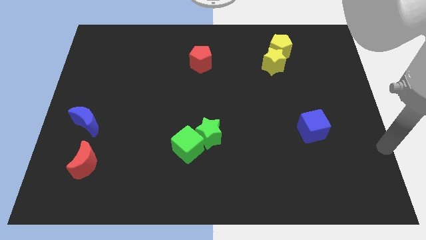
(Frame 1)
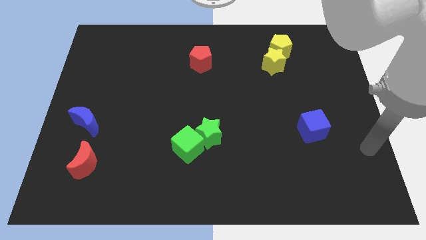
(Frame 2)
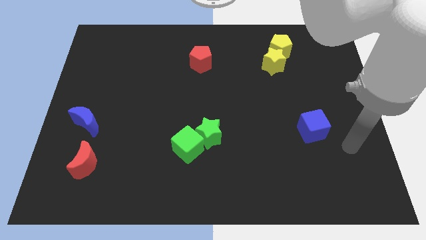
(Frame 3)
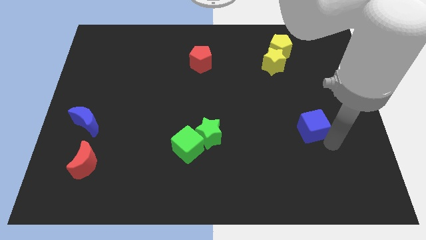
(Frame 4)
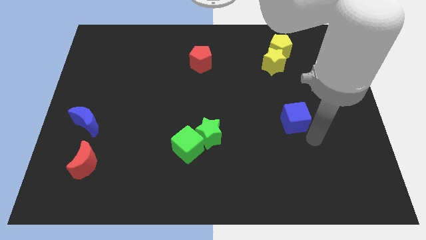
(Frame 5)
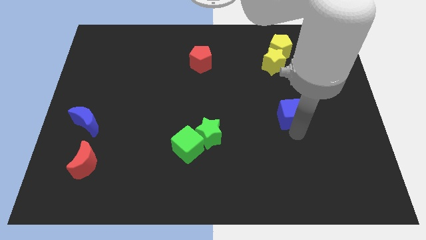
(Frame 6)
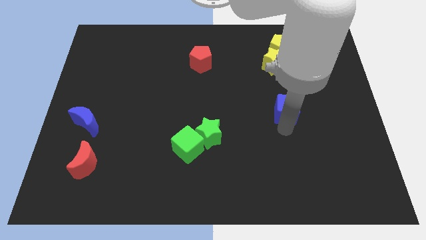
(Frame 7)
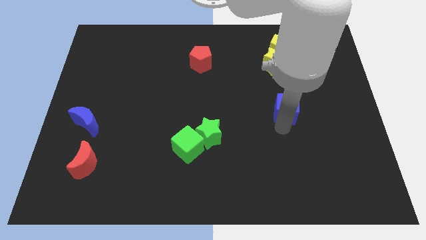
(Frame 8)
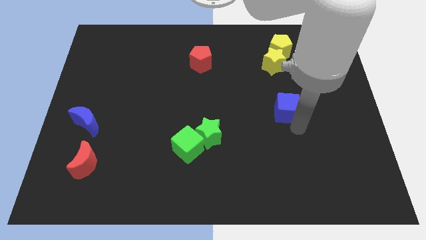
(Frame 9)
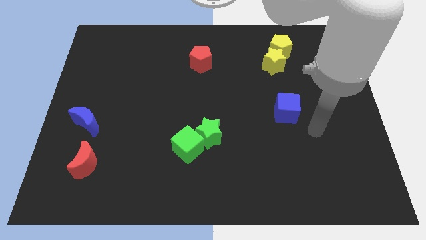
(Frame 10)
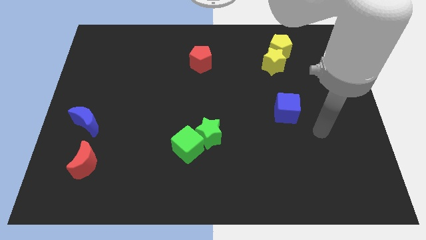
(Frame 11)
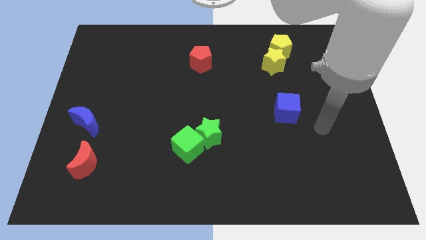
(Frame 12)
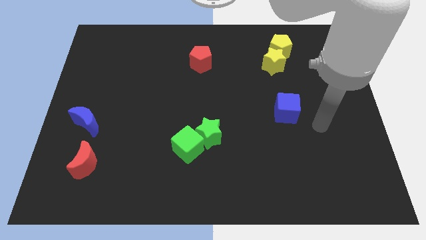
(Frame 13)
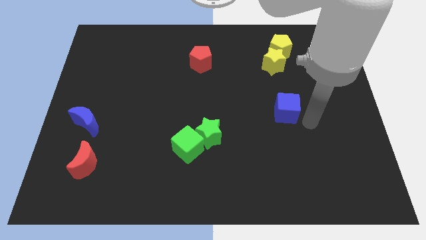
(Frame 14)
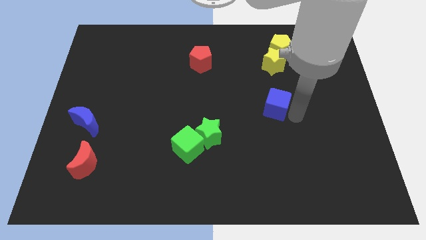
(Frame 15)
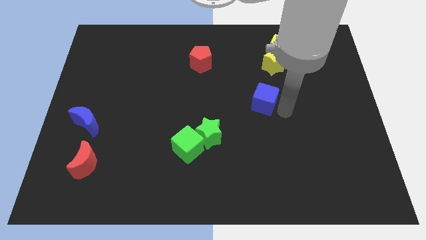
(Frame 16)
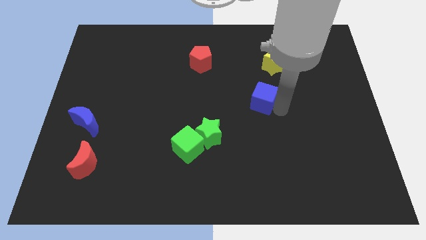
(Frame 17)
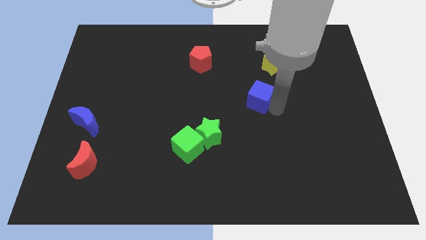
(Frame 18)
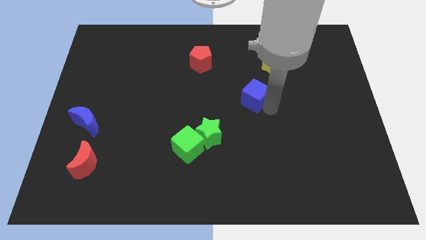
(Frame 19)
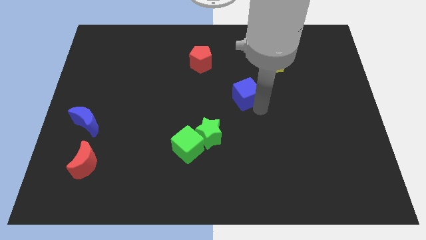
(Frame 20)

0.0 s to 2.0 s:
move the blue cube between yellow and green blocks

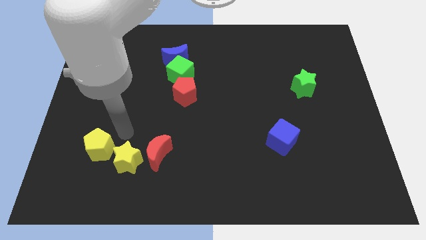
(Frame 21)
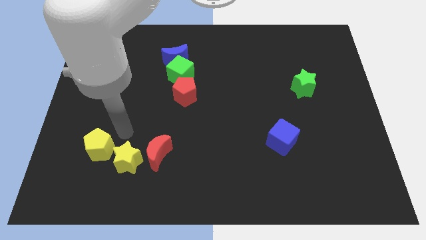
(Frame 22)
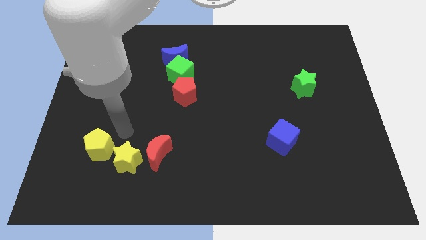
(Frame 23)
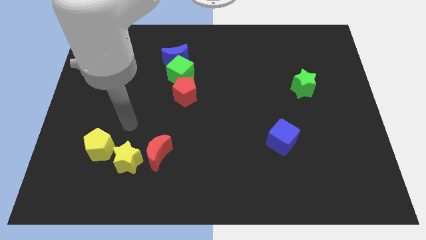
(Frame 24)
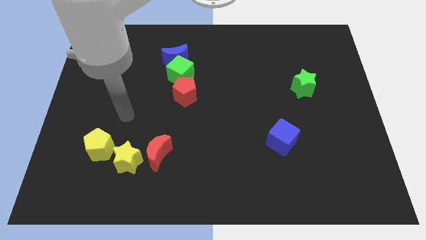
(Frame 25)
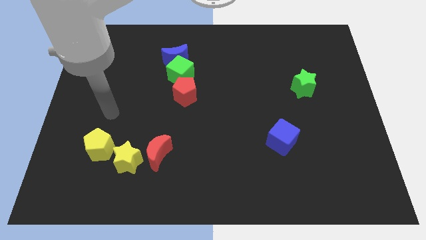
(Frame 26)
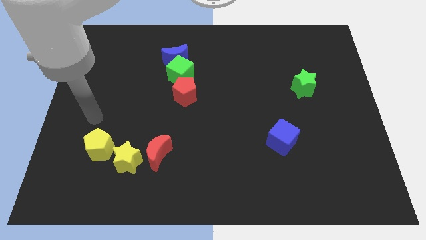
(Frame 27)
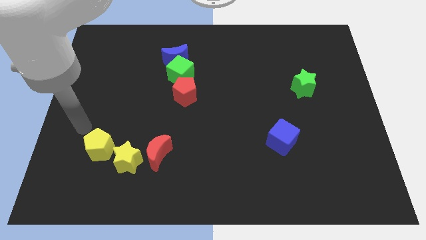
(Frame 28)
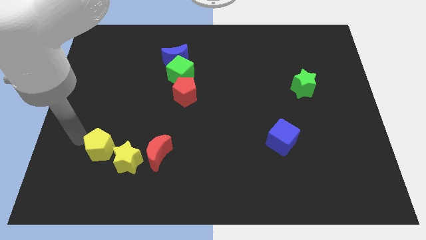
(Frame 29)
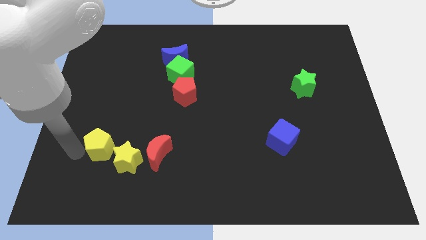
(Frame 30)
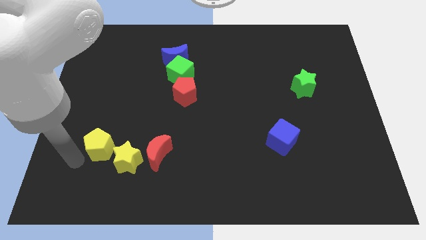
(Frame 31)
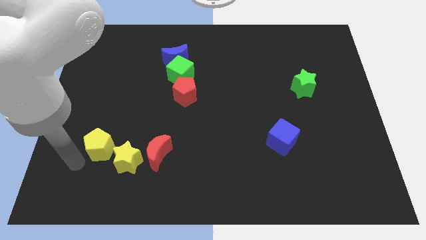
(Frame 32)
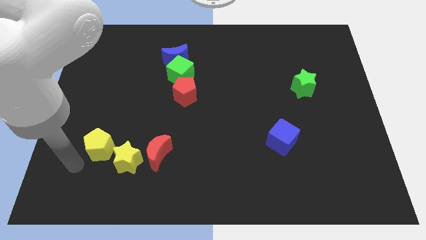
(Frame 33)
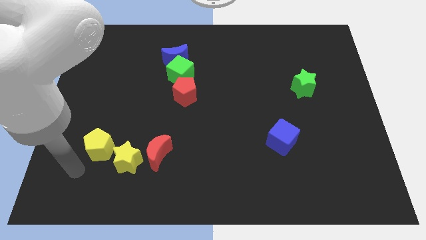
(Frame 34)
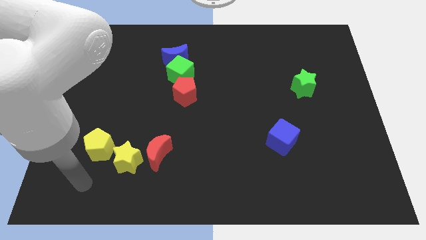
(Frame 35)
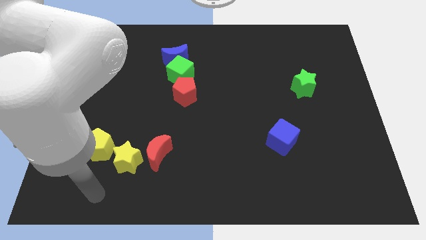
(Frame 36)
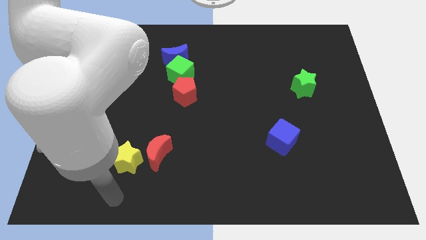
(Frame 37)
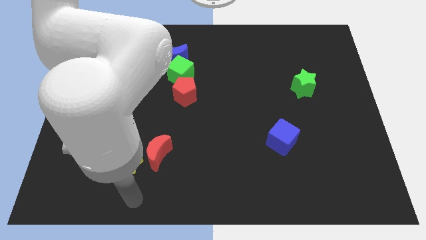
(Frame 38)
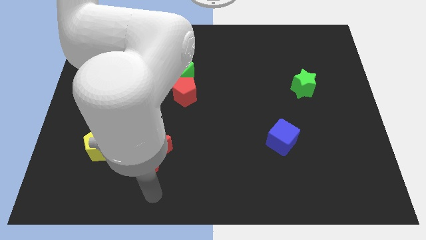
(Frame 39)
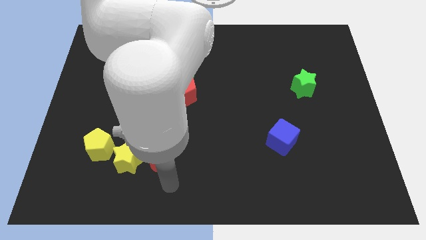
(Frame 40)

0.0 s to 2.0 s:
point your hand below the red moon

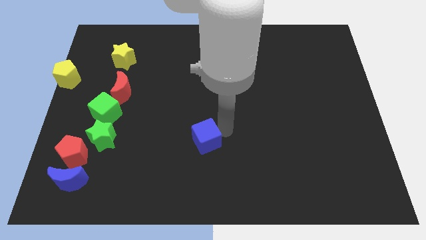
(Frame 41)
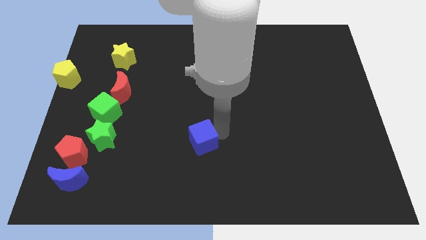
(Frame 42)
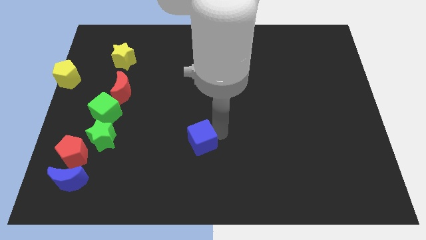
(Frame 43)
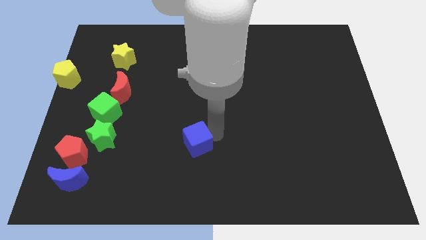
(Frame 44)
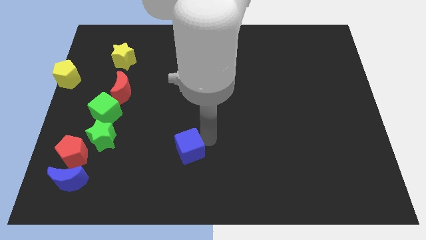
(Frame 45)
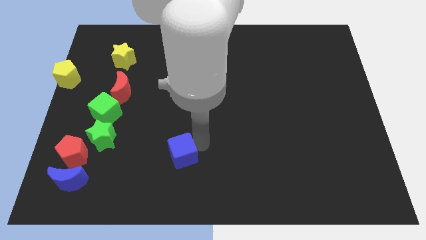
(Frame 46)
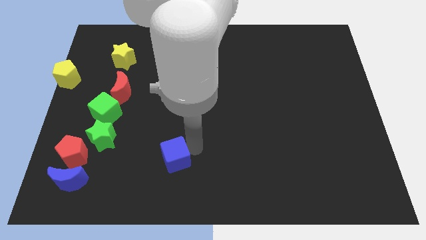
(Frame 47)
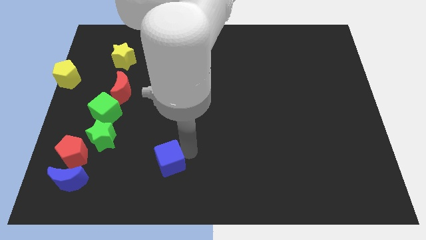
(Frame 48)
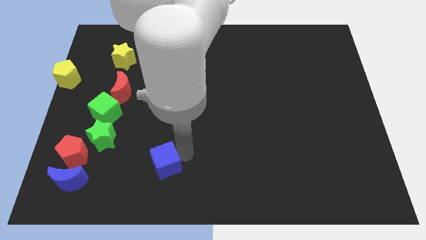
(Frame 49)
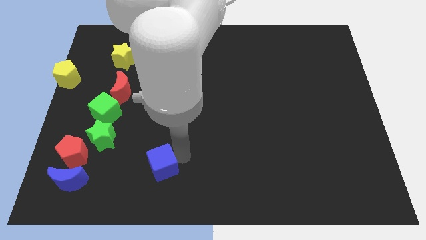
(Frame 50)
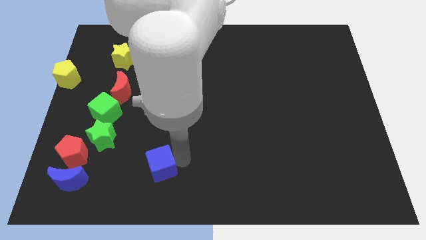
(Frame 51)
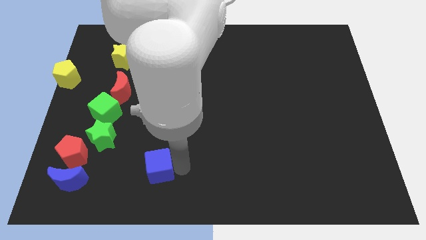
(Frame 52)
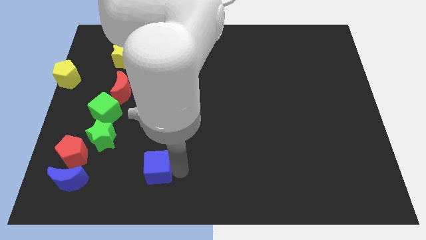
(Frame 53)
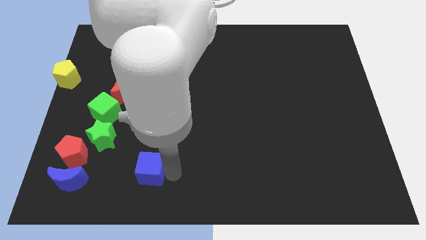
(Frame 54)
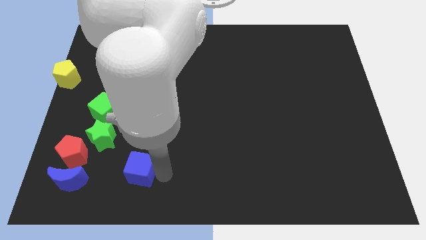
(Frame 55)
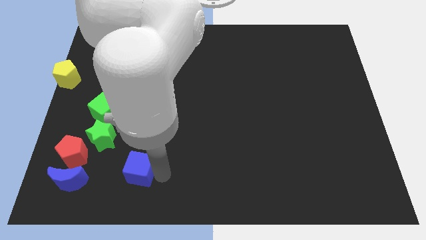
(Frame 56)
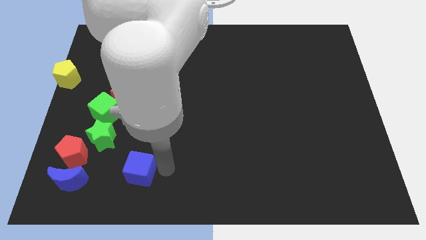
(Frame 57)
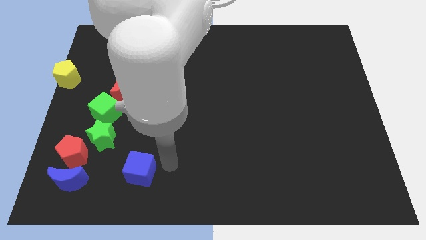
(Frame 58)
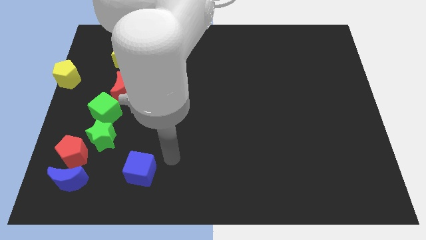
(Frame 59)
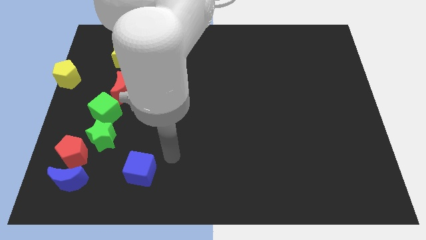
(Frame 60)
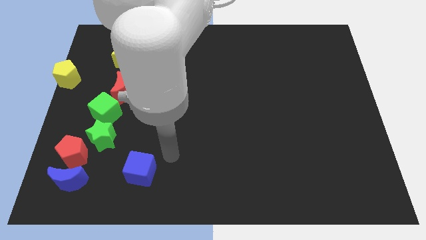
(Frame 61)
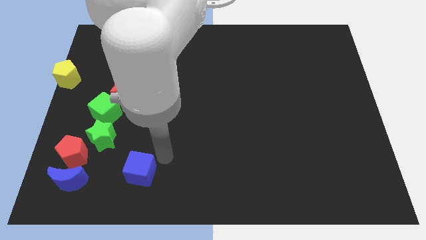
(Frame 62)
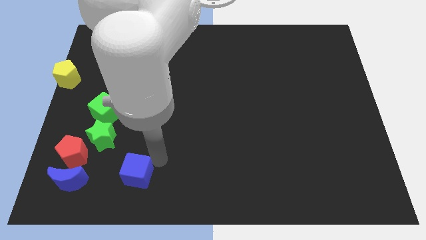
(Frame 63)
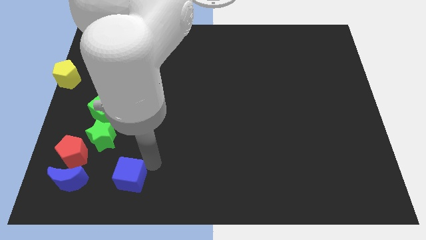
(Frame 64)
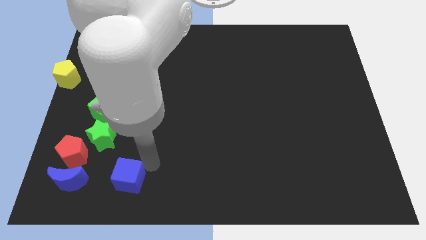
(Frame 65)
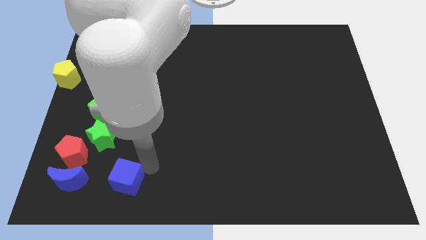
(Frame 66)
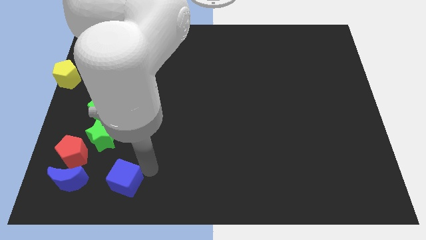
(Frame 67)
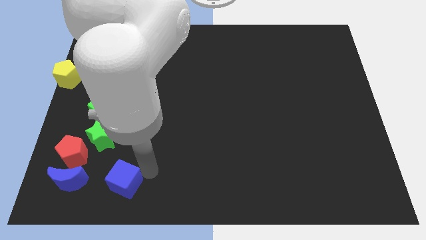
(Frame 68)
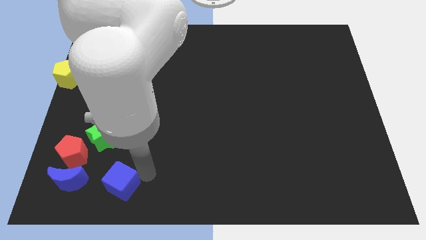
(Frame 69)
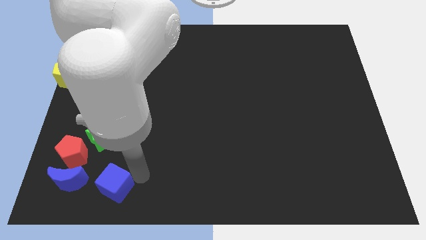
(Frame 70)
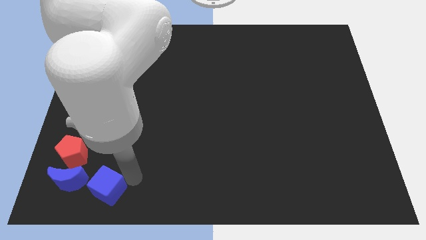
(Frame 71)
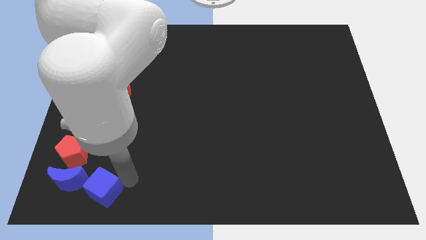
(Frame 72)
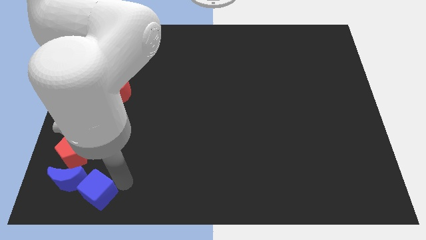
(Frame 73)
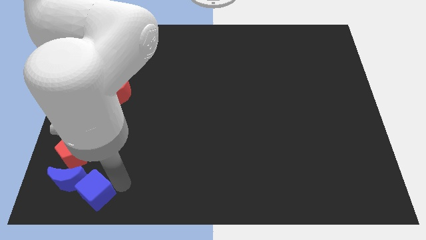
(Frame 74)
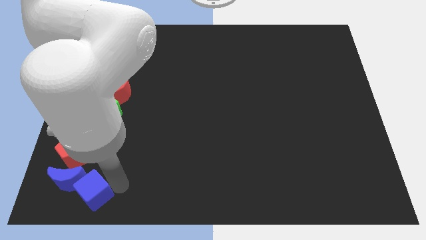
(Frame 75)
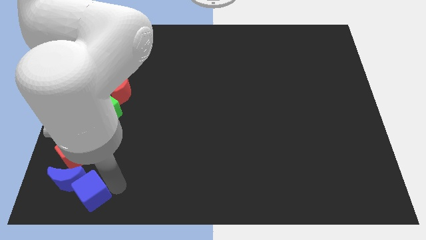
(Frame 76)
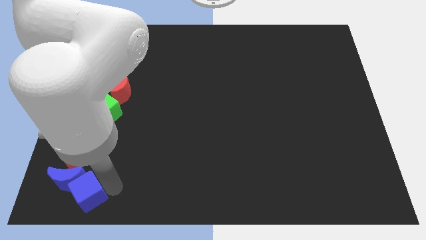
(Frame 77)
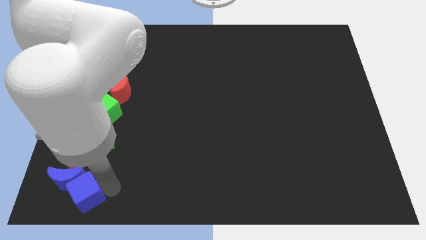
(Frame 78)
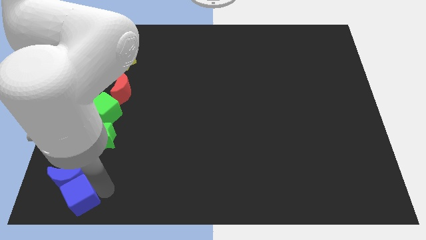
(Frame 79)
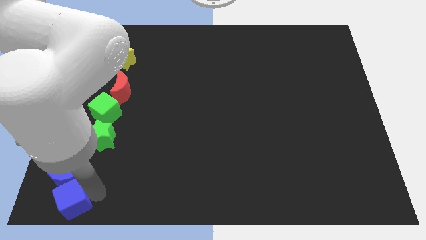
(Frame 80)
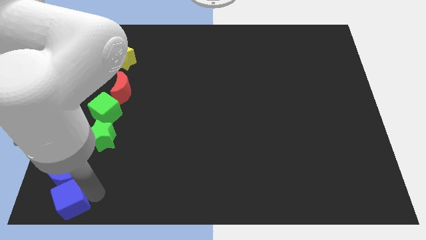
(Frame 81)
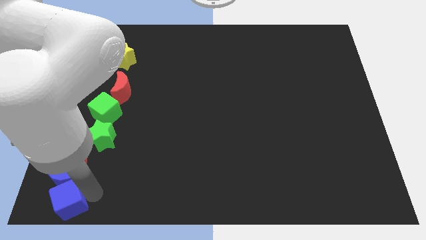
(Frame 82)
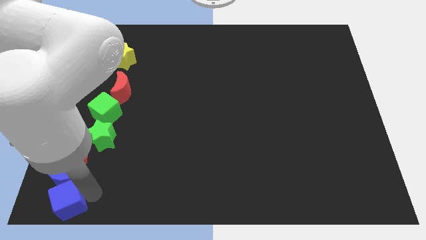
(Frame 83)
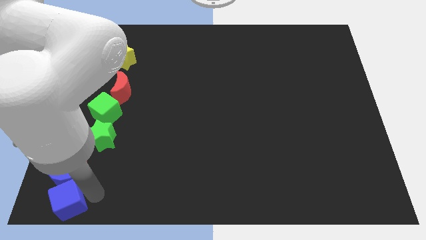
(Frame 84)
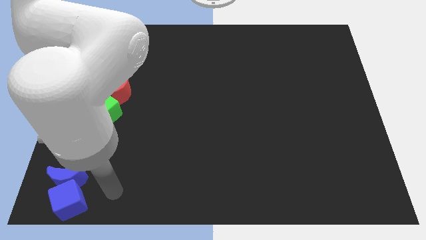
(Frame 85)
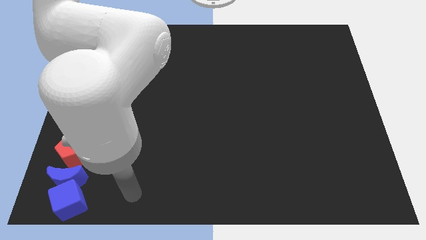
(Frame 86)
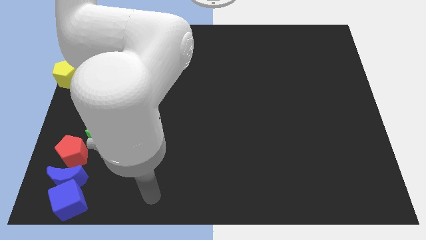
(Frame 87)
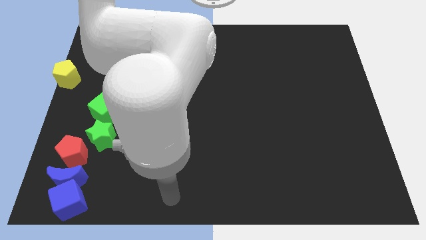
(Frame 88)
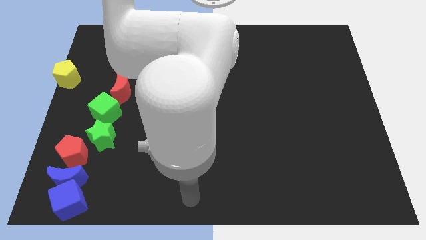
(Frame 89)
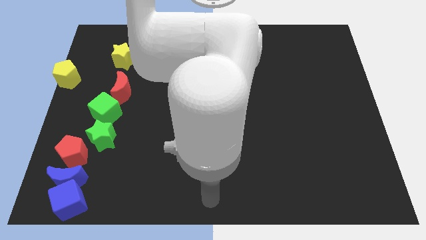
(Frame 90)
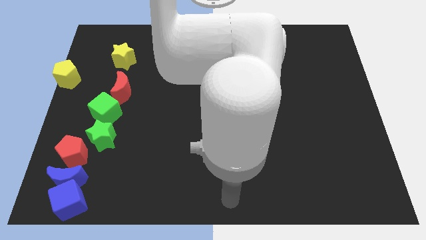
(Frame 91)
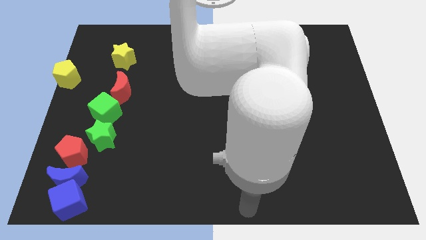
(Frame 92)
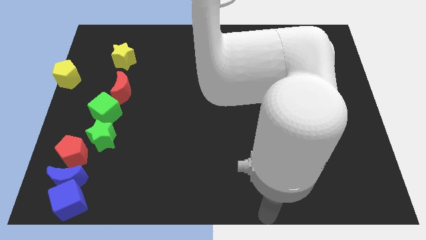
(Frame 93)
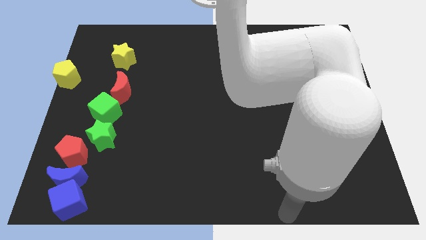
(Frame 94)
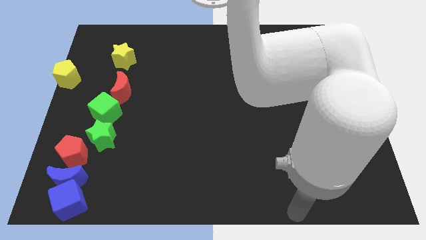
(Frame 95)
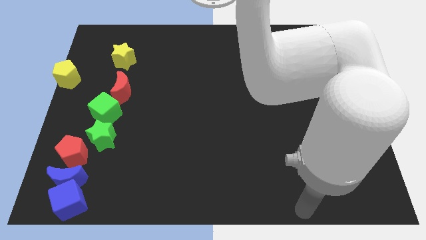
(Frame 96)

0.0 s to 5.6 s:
place the blue cube below the blue crescent
